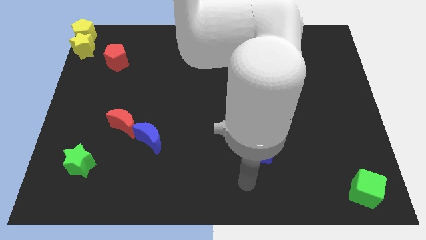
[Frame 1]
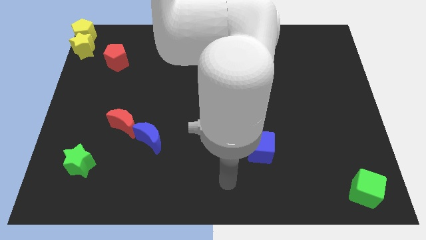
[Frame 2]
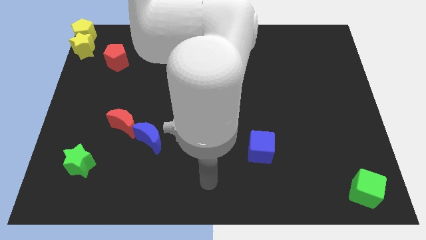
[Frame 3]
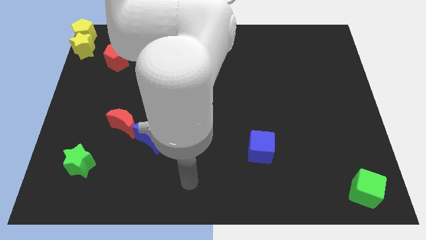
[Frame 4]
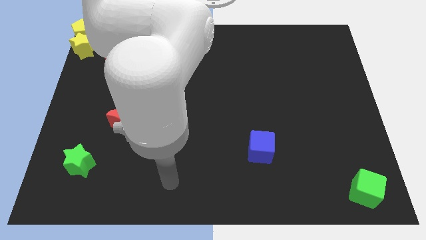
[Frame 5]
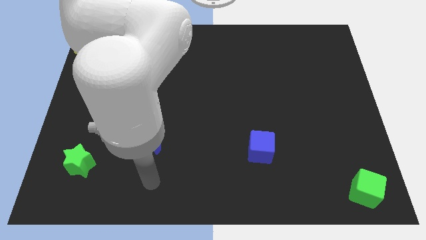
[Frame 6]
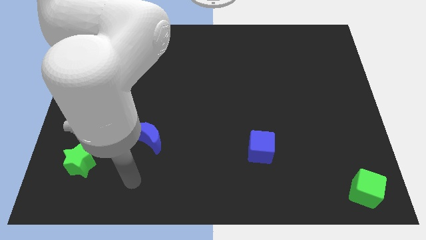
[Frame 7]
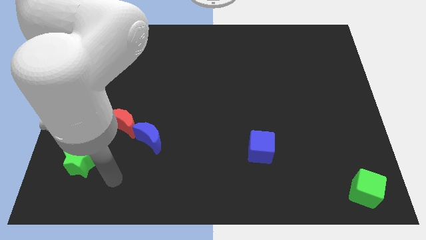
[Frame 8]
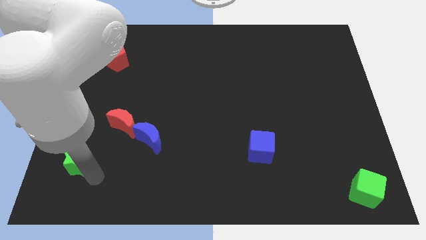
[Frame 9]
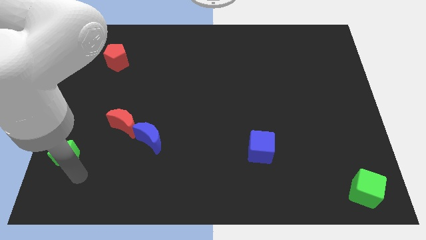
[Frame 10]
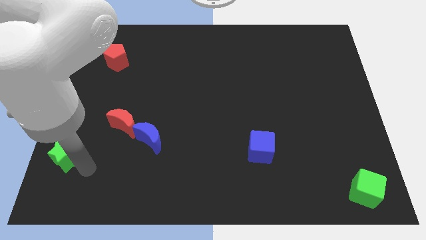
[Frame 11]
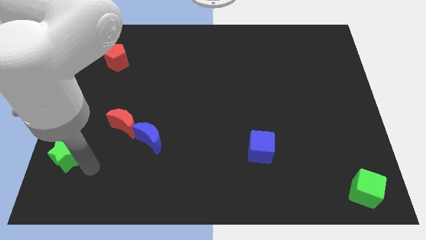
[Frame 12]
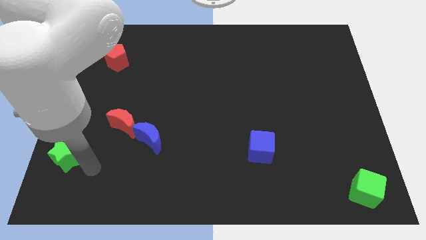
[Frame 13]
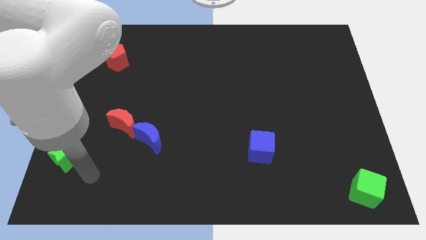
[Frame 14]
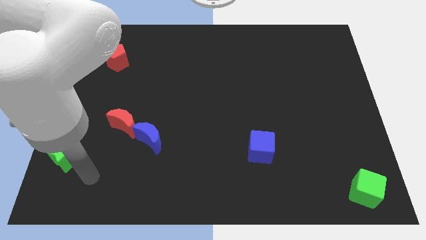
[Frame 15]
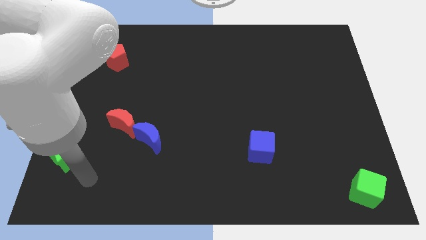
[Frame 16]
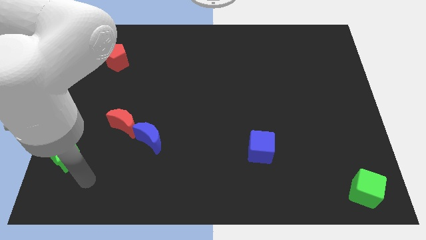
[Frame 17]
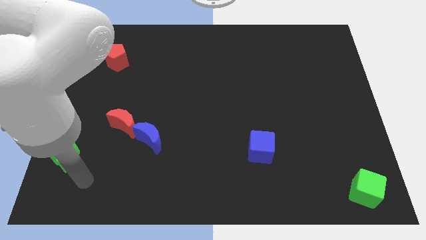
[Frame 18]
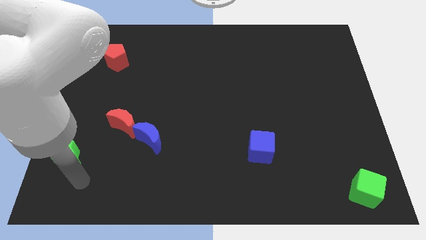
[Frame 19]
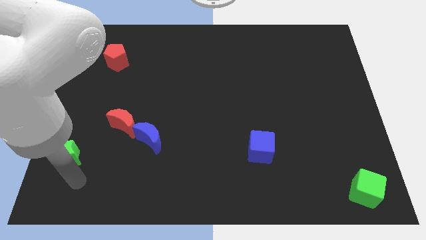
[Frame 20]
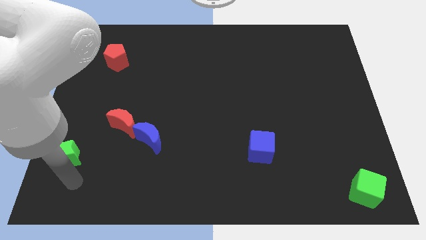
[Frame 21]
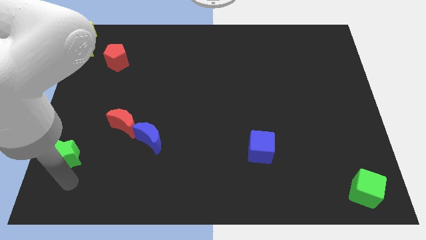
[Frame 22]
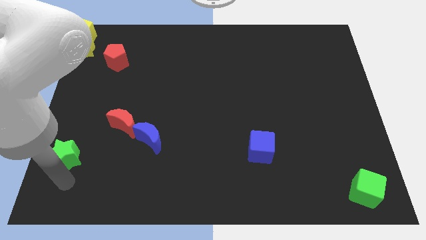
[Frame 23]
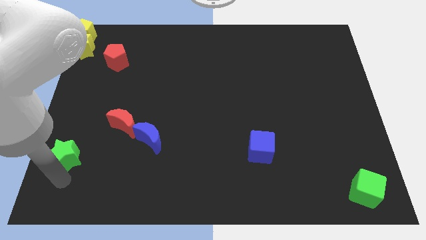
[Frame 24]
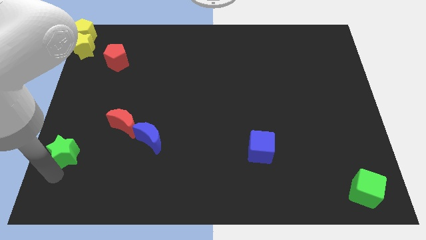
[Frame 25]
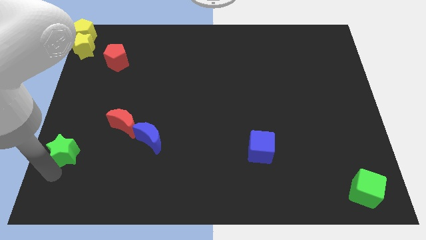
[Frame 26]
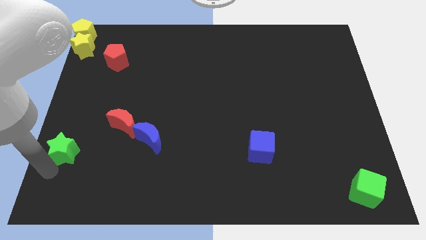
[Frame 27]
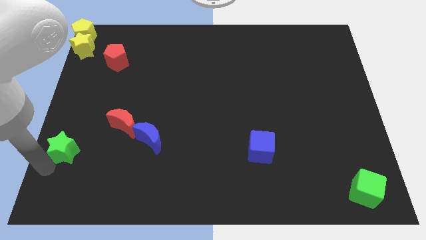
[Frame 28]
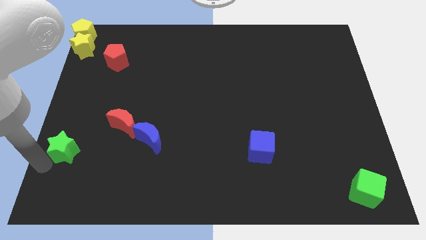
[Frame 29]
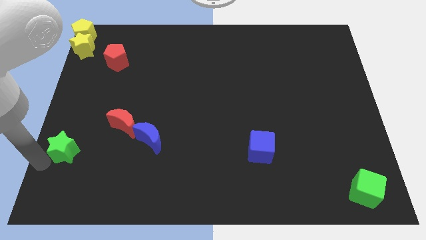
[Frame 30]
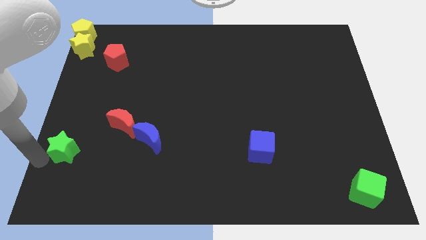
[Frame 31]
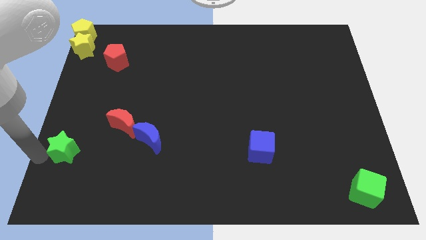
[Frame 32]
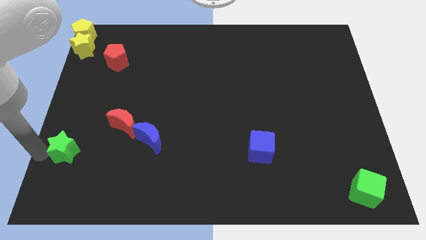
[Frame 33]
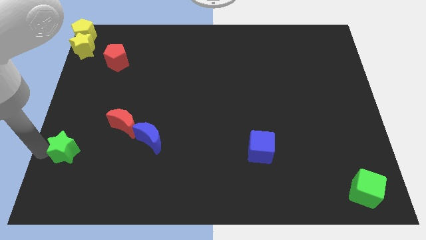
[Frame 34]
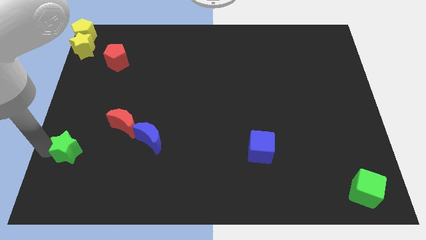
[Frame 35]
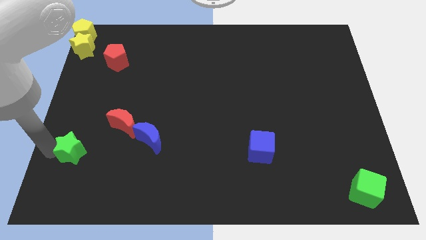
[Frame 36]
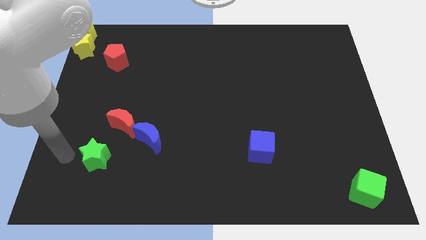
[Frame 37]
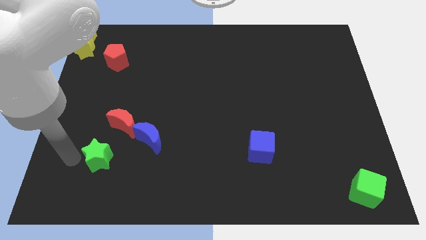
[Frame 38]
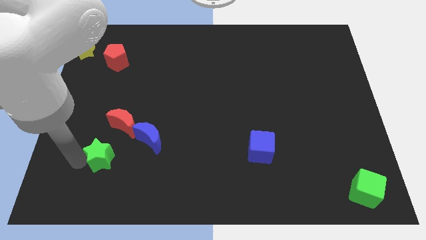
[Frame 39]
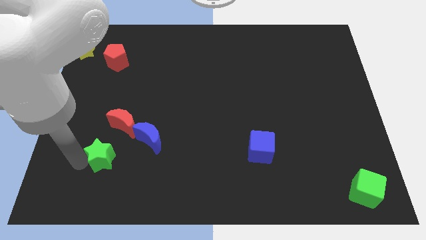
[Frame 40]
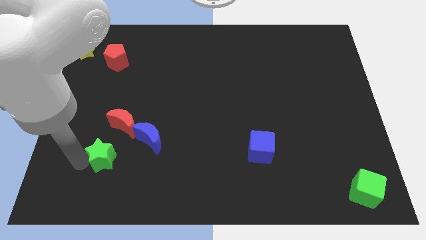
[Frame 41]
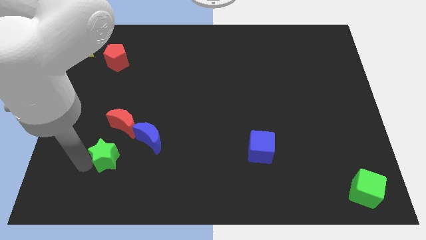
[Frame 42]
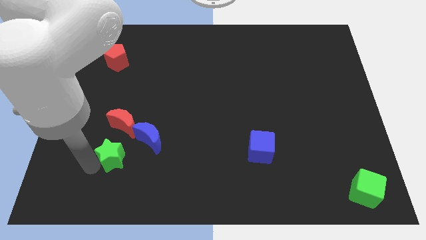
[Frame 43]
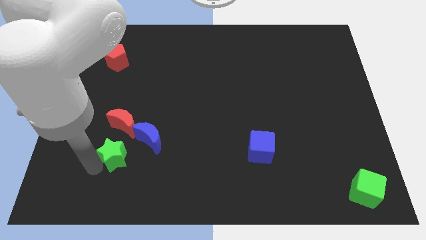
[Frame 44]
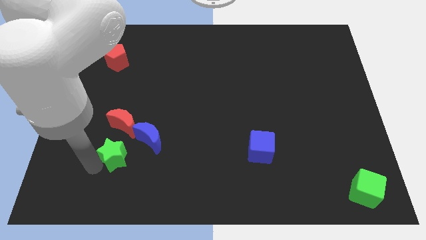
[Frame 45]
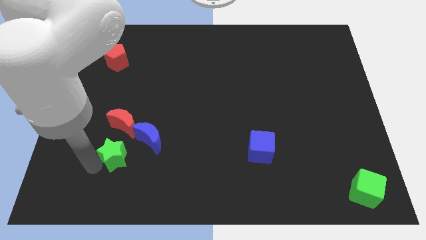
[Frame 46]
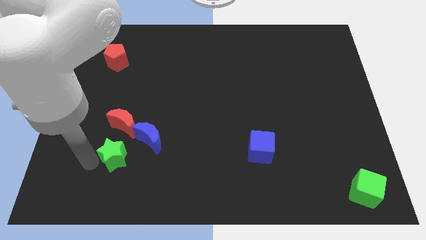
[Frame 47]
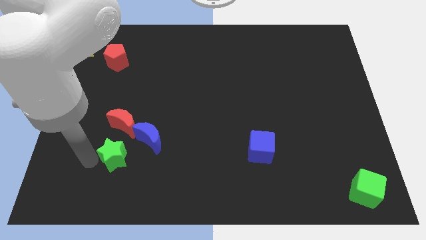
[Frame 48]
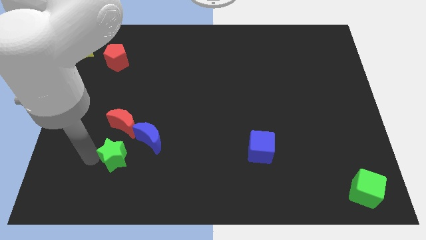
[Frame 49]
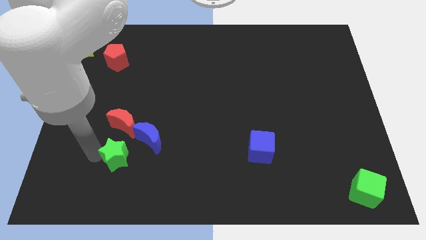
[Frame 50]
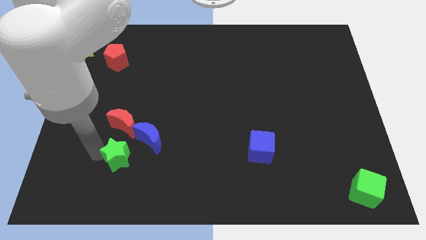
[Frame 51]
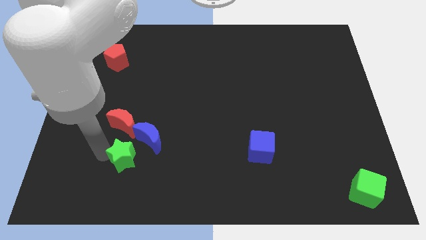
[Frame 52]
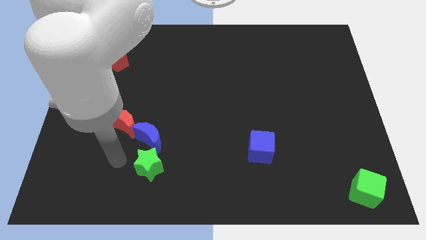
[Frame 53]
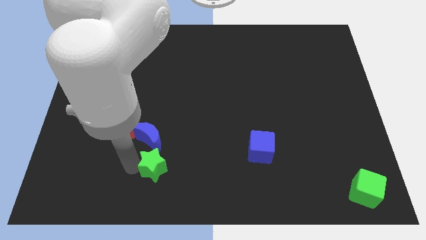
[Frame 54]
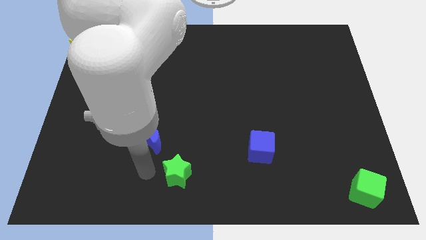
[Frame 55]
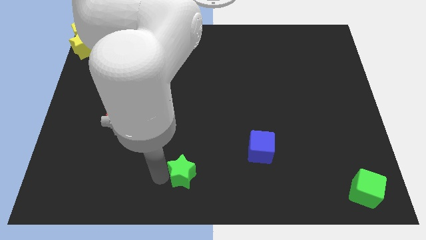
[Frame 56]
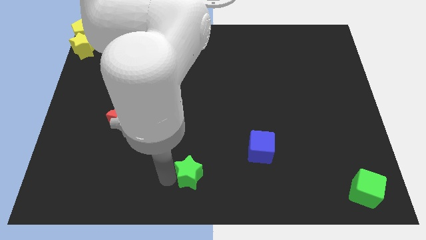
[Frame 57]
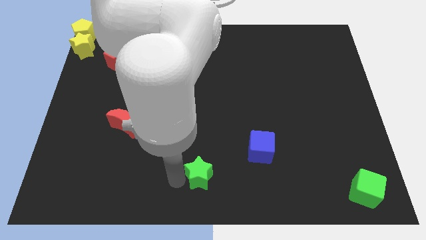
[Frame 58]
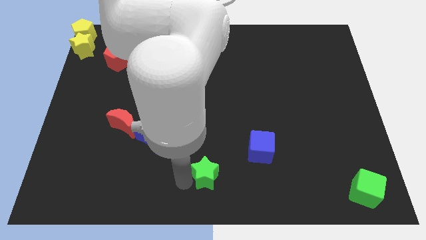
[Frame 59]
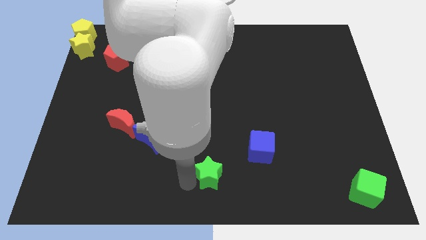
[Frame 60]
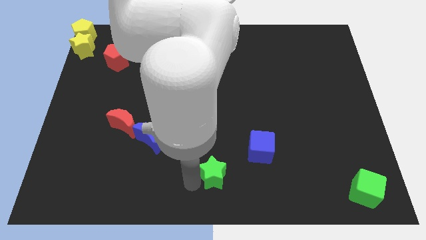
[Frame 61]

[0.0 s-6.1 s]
place the green star at the bottom center of the board

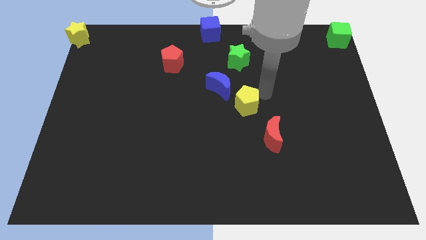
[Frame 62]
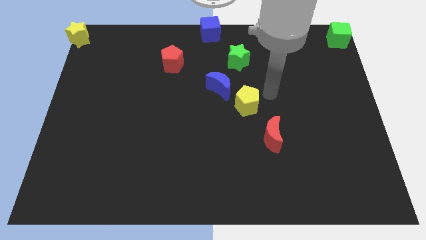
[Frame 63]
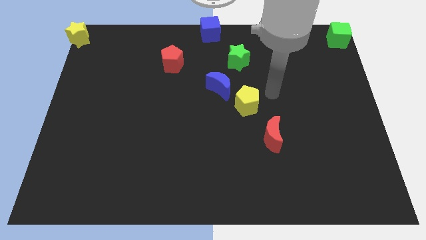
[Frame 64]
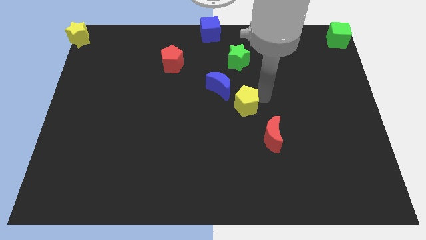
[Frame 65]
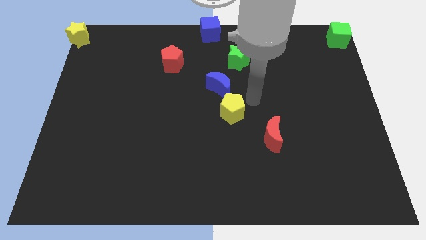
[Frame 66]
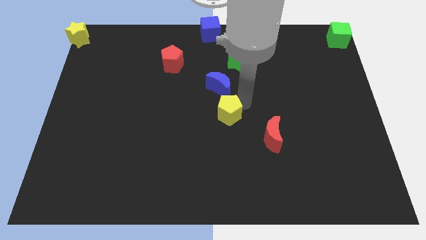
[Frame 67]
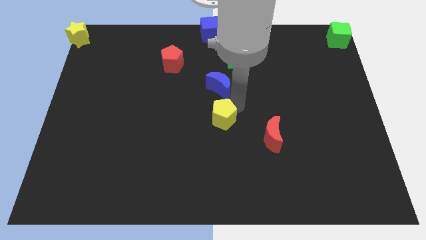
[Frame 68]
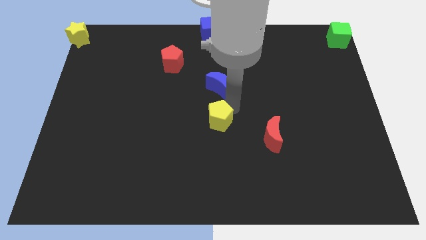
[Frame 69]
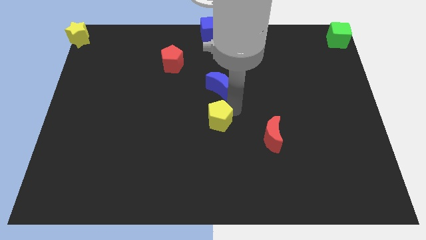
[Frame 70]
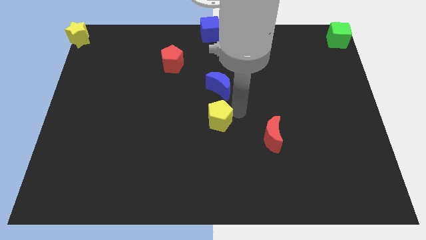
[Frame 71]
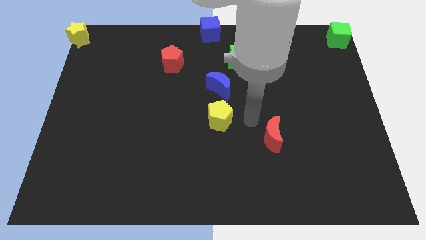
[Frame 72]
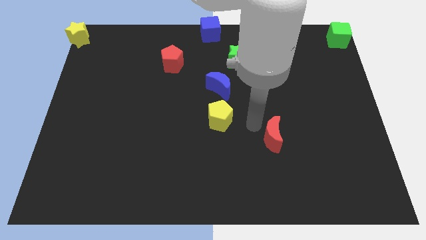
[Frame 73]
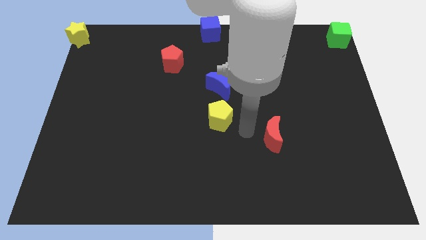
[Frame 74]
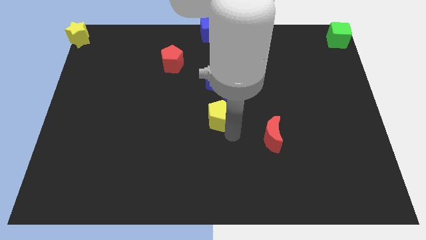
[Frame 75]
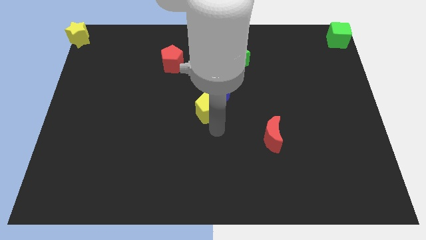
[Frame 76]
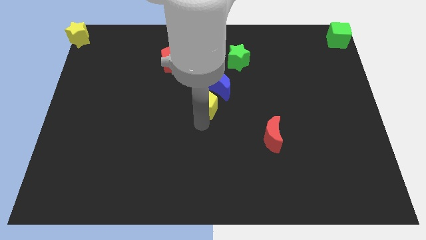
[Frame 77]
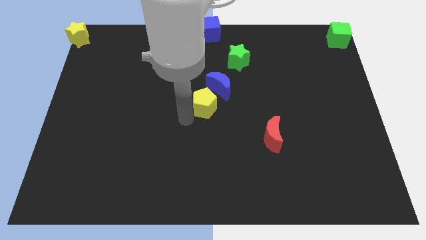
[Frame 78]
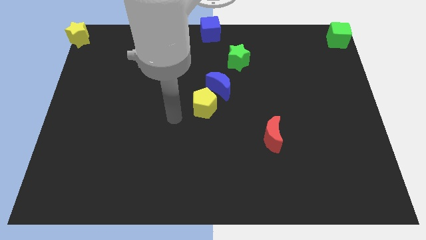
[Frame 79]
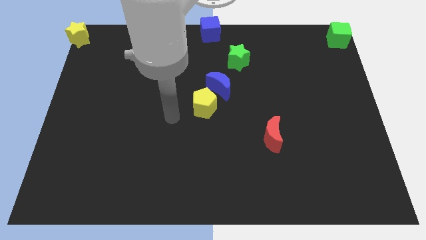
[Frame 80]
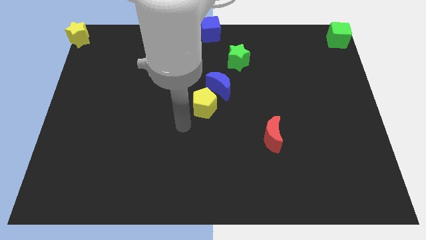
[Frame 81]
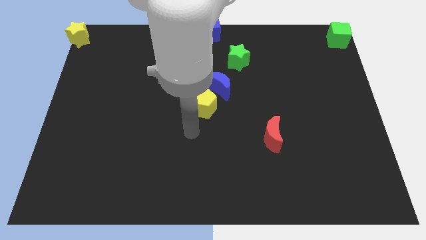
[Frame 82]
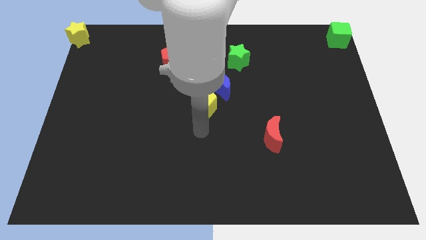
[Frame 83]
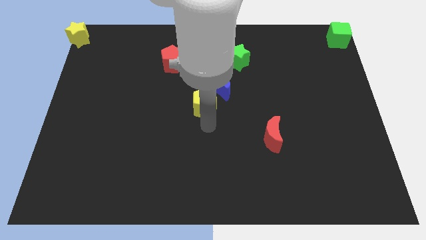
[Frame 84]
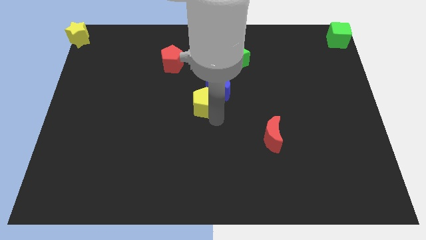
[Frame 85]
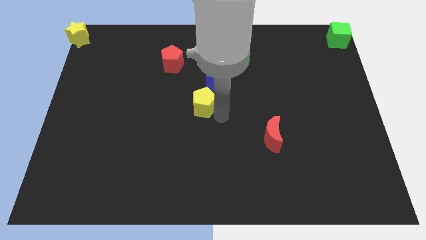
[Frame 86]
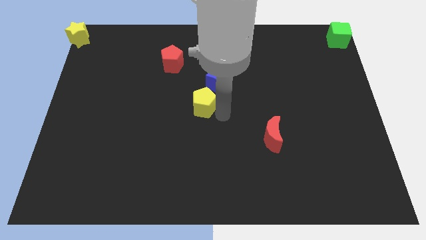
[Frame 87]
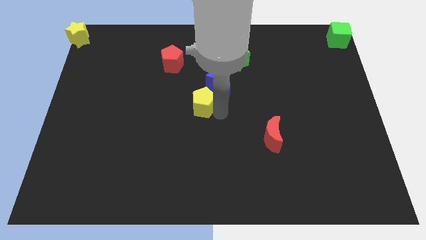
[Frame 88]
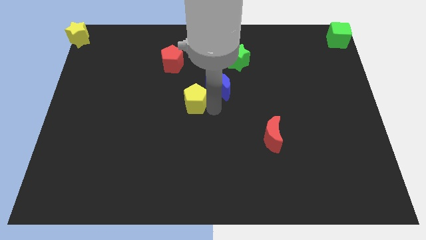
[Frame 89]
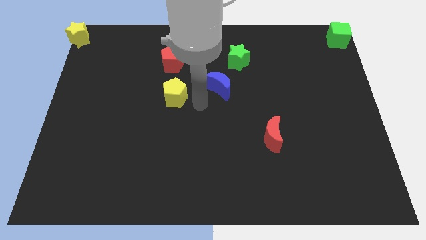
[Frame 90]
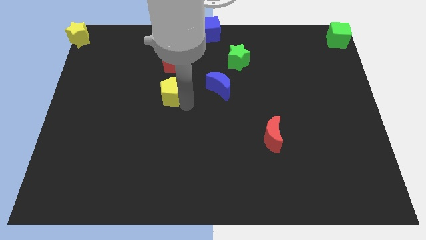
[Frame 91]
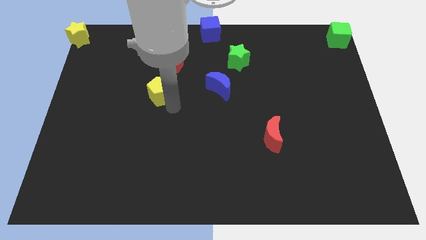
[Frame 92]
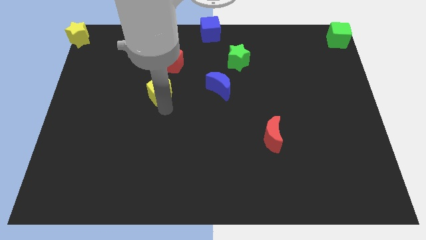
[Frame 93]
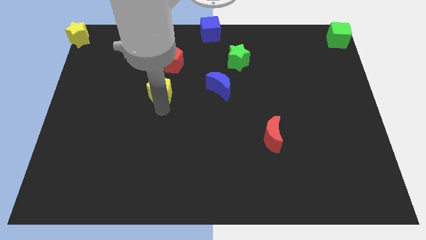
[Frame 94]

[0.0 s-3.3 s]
move the yellow pentagon below the red pentagon
